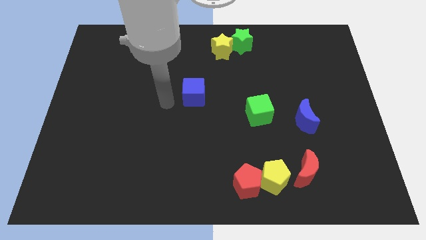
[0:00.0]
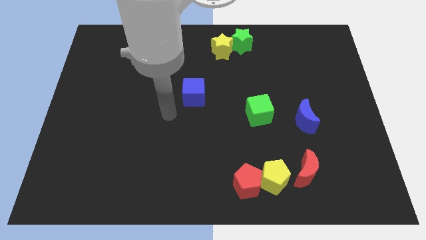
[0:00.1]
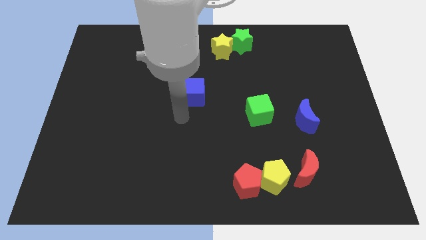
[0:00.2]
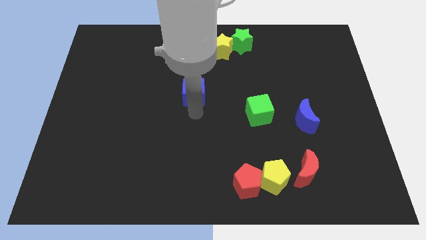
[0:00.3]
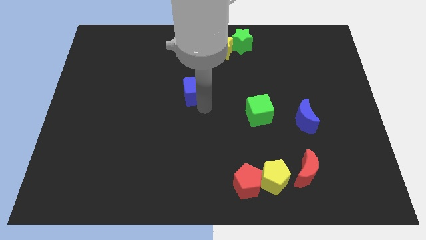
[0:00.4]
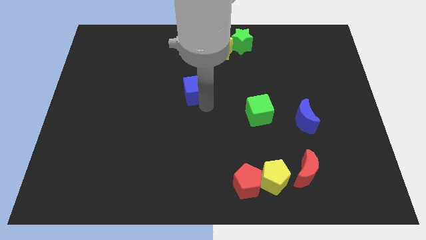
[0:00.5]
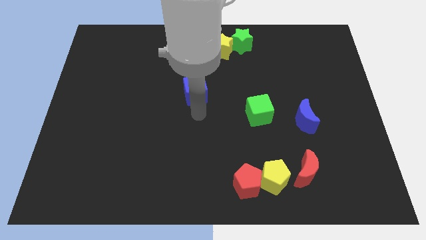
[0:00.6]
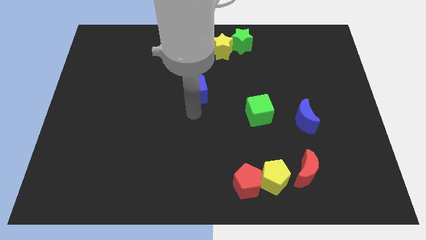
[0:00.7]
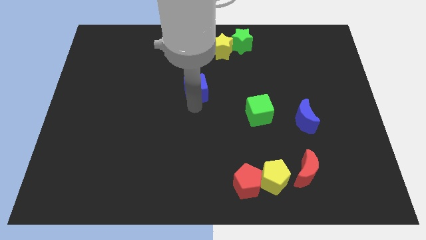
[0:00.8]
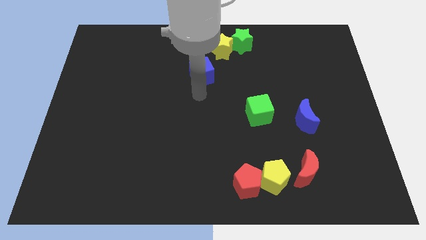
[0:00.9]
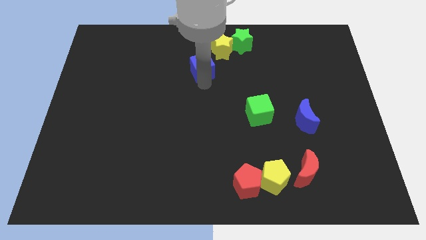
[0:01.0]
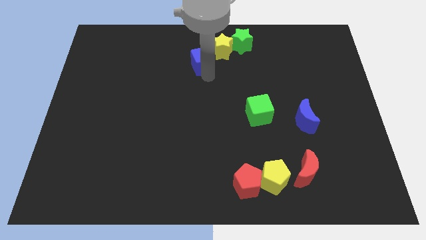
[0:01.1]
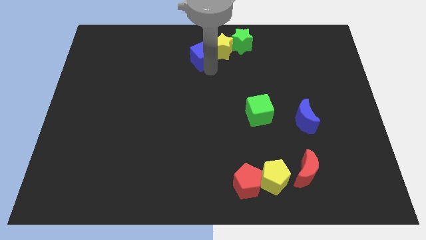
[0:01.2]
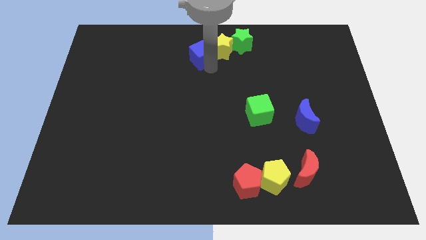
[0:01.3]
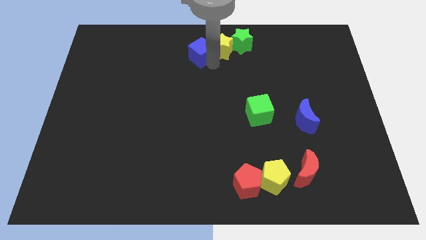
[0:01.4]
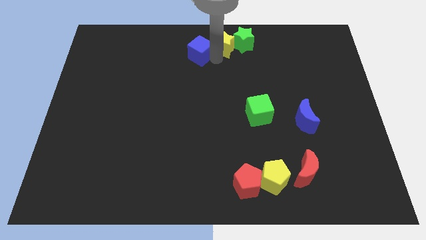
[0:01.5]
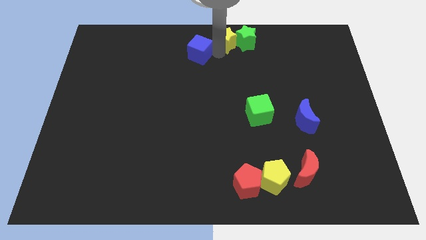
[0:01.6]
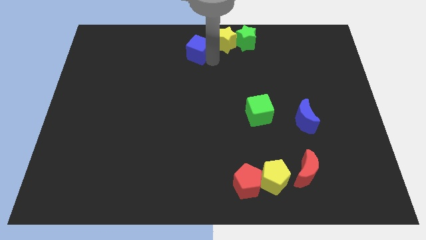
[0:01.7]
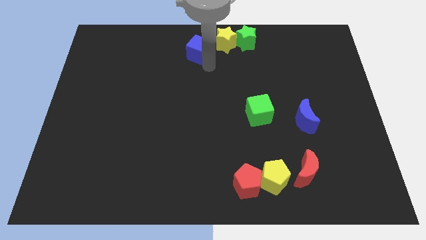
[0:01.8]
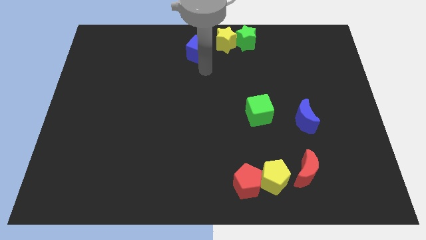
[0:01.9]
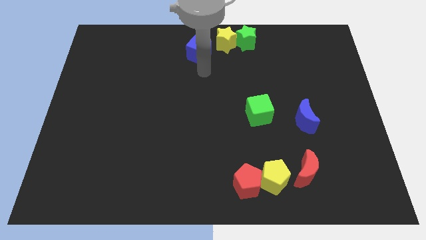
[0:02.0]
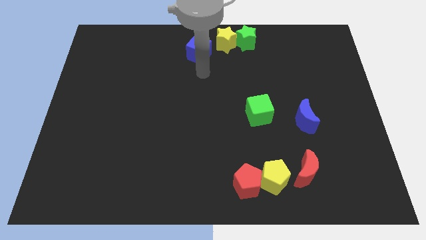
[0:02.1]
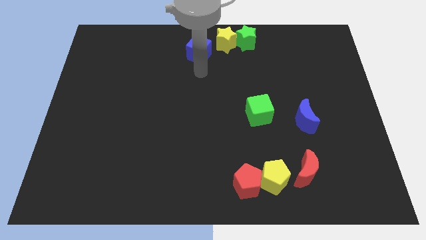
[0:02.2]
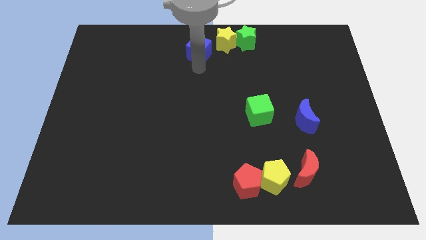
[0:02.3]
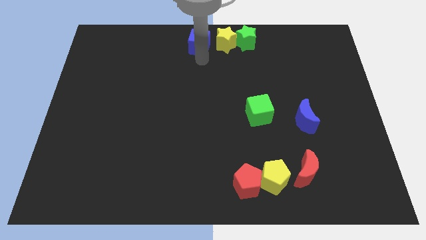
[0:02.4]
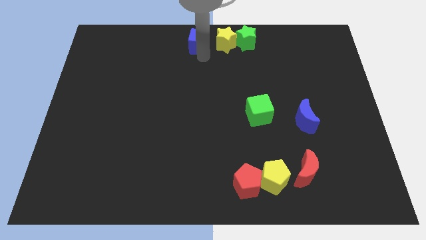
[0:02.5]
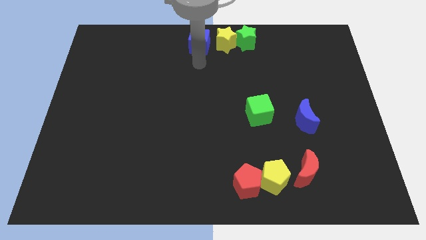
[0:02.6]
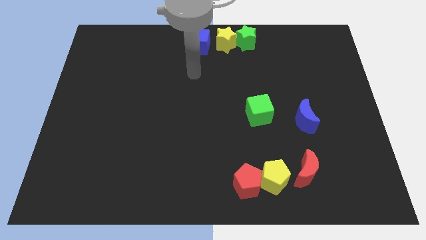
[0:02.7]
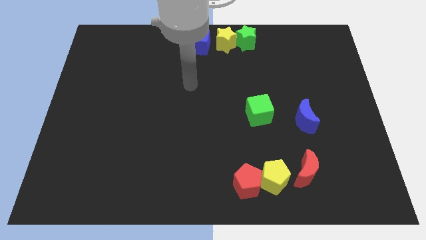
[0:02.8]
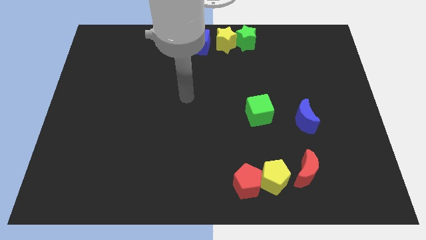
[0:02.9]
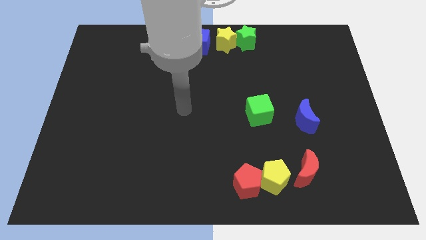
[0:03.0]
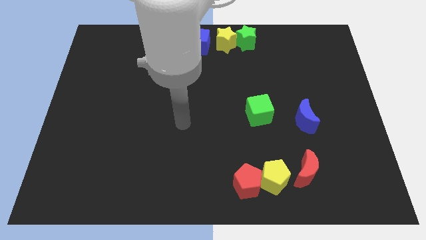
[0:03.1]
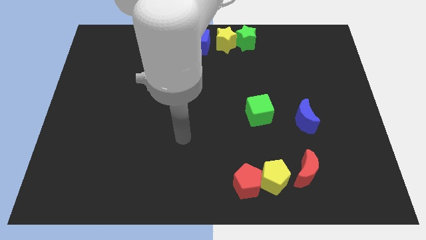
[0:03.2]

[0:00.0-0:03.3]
move the blue cube towards the top center

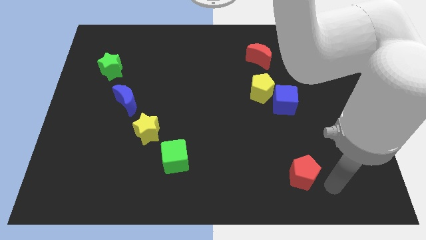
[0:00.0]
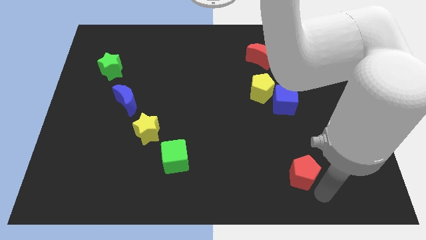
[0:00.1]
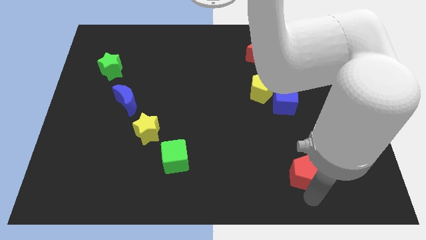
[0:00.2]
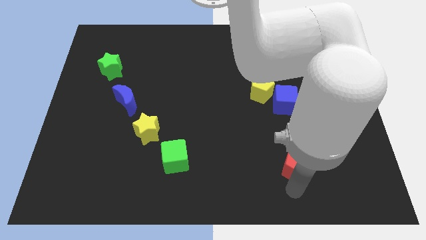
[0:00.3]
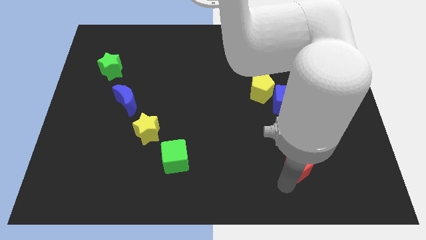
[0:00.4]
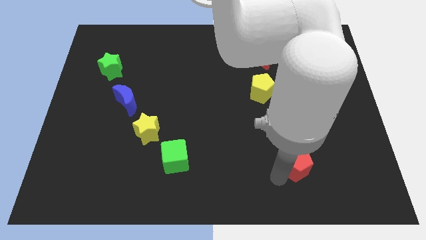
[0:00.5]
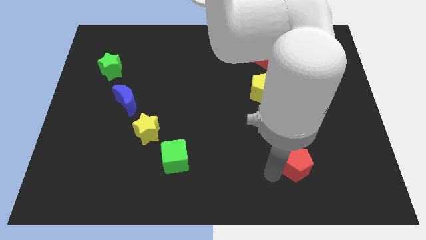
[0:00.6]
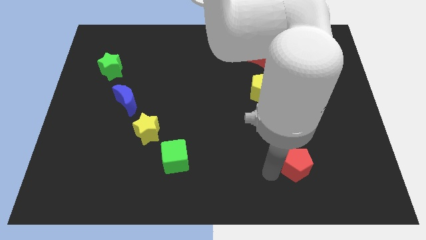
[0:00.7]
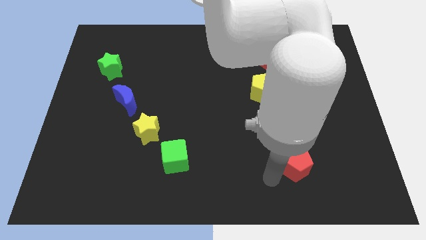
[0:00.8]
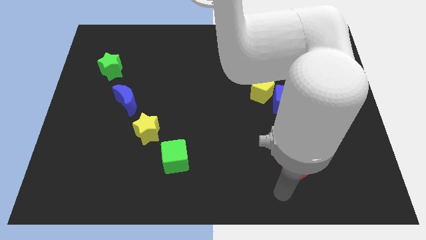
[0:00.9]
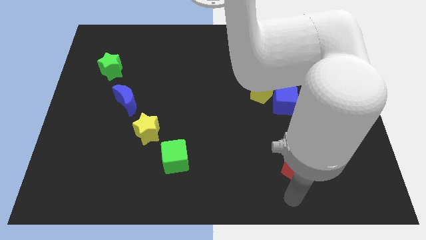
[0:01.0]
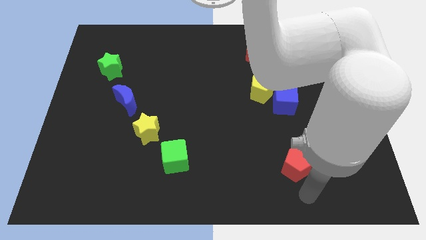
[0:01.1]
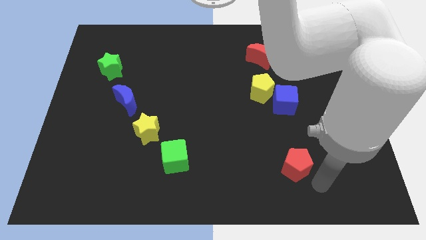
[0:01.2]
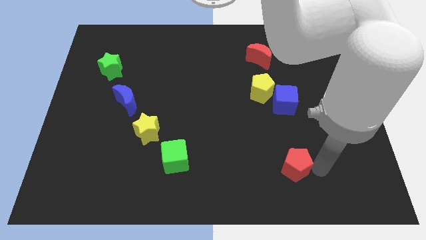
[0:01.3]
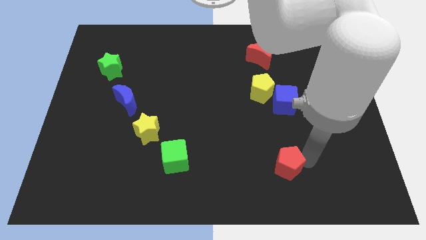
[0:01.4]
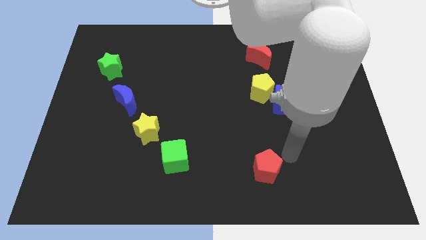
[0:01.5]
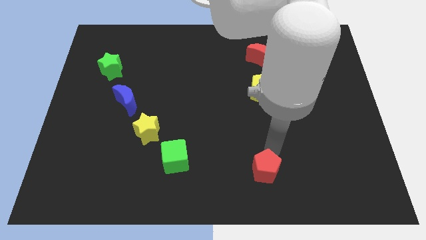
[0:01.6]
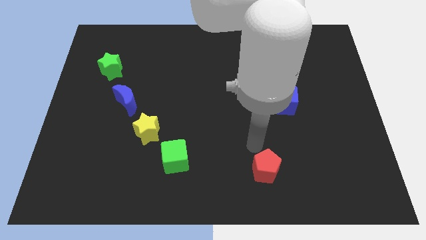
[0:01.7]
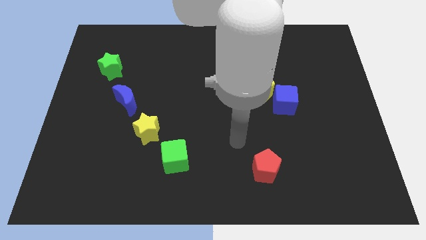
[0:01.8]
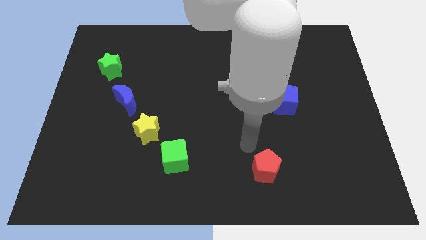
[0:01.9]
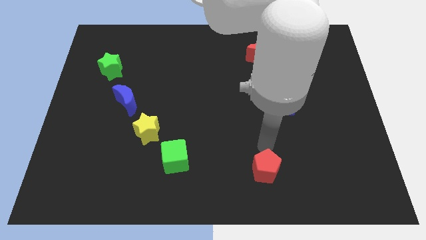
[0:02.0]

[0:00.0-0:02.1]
push the red pentagon towards the green cube

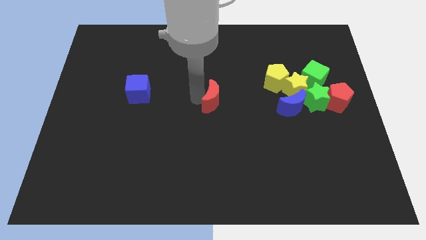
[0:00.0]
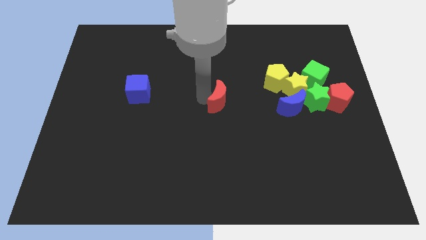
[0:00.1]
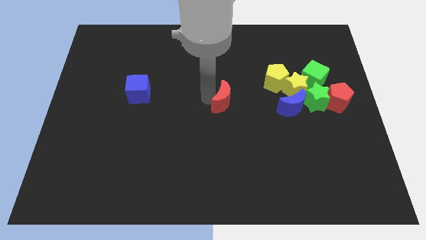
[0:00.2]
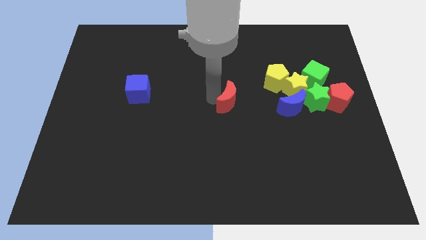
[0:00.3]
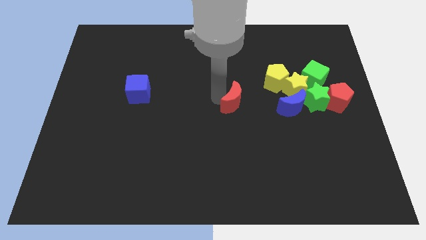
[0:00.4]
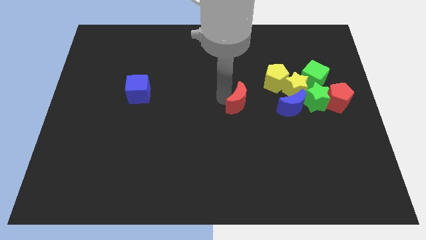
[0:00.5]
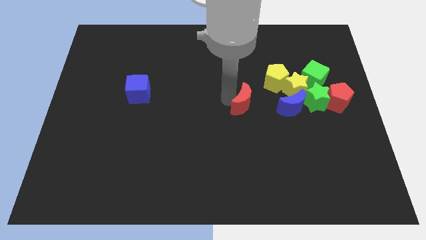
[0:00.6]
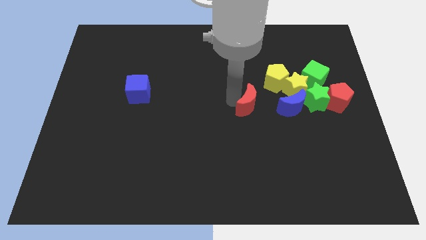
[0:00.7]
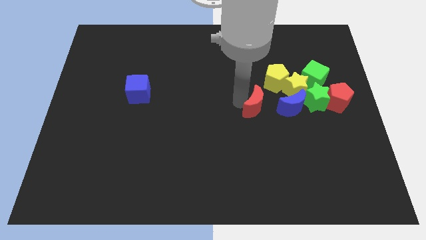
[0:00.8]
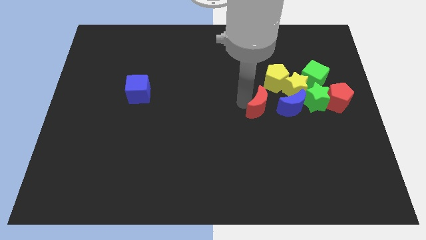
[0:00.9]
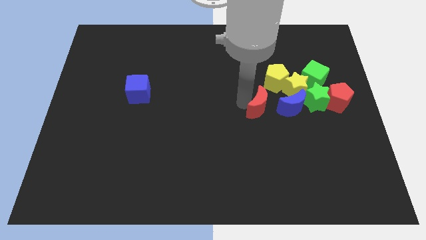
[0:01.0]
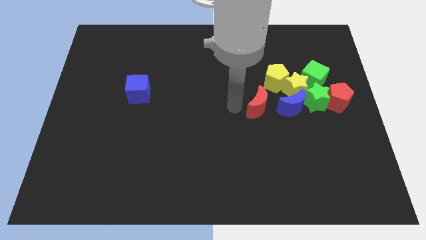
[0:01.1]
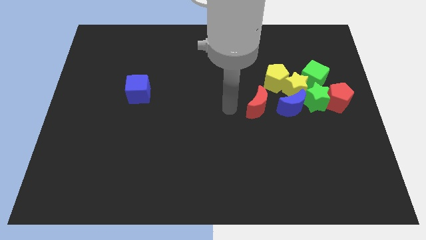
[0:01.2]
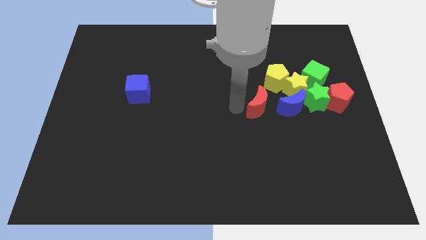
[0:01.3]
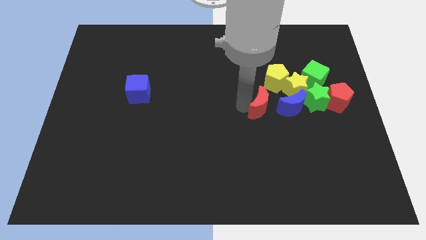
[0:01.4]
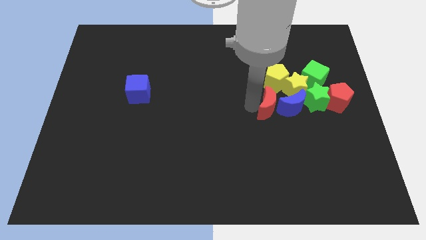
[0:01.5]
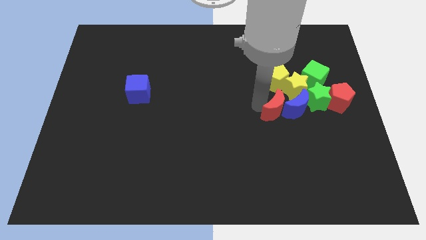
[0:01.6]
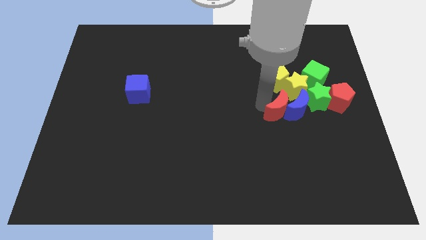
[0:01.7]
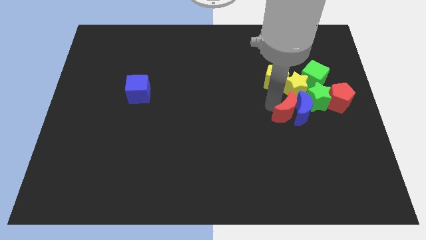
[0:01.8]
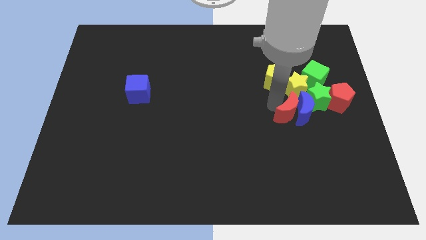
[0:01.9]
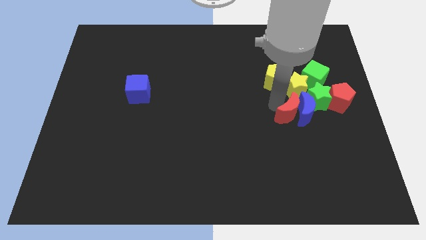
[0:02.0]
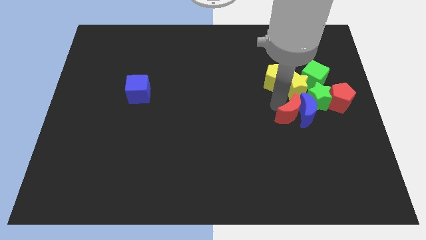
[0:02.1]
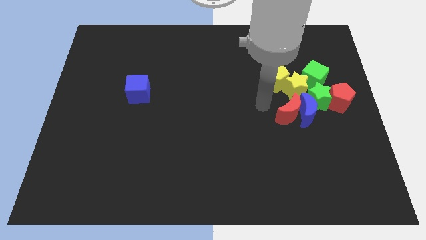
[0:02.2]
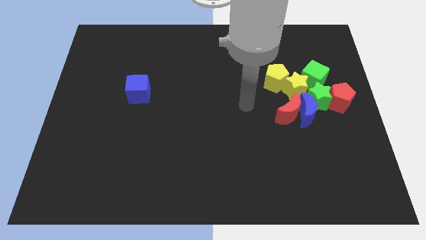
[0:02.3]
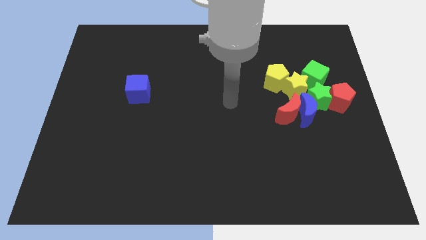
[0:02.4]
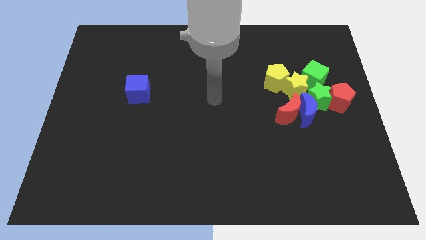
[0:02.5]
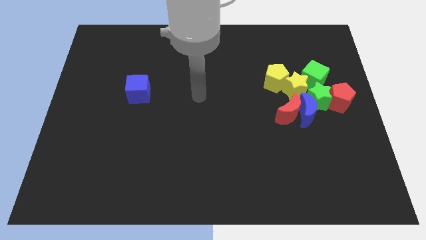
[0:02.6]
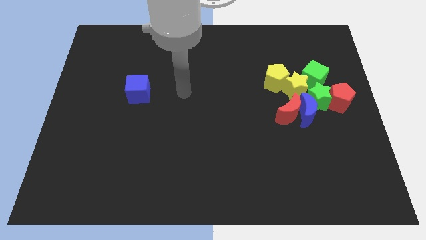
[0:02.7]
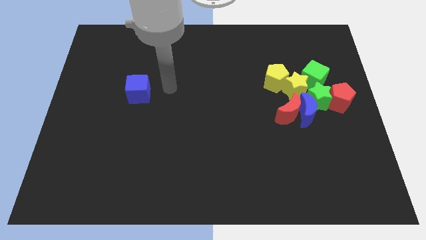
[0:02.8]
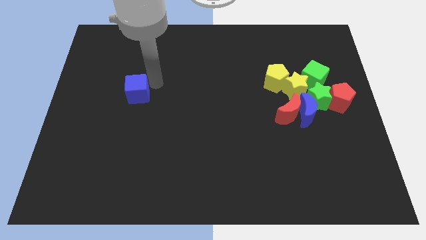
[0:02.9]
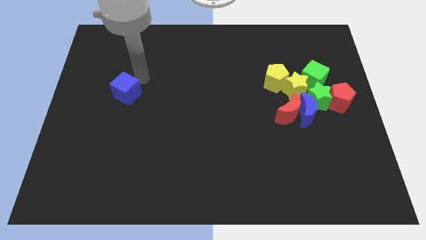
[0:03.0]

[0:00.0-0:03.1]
push the red moon into the blue moon

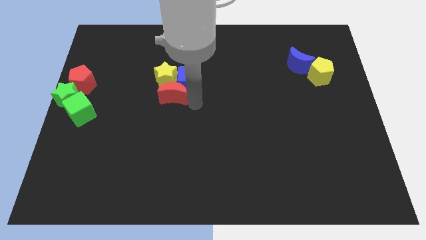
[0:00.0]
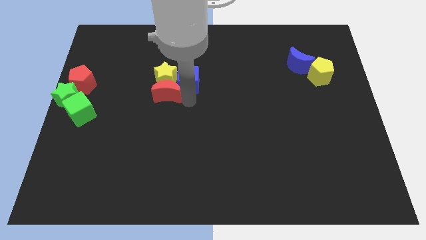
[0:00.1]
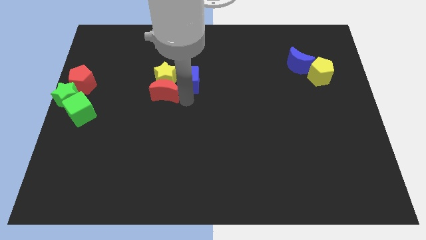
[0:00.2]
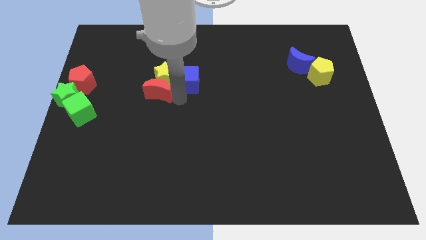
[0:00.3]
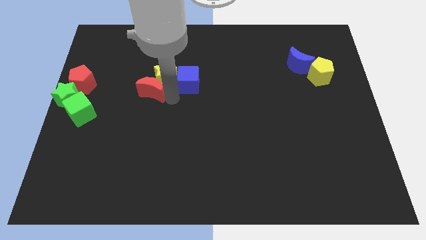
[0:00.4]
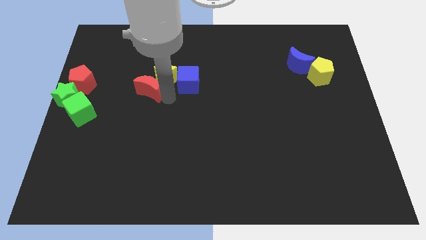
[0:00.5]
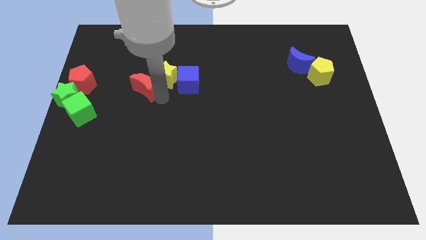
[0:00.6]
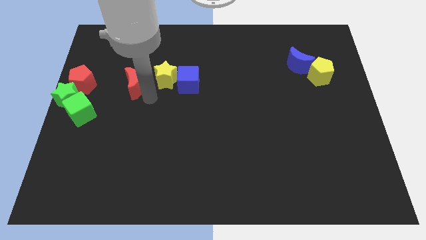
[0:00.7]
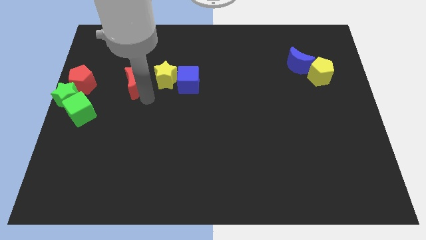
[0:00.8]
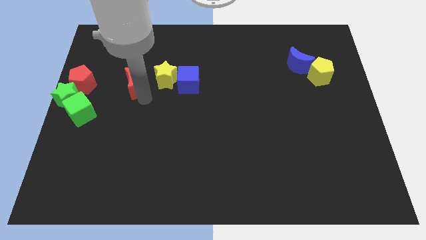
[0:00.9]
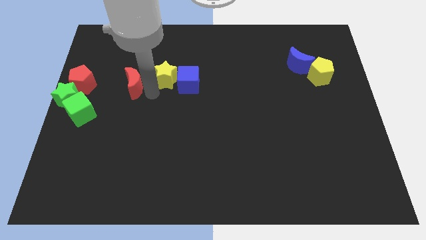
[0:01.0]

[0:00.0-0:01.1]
move the red moon to the left of the yellow star
